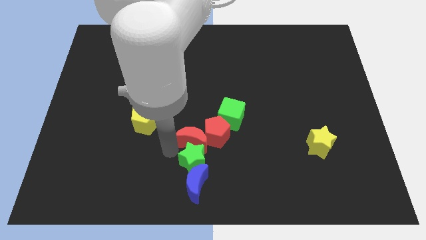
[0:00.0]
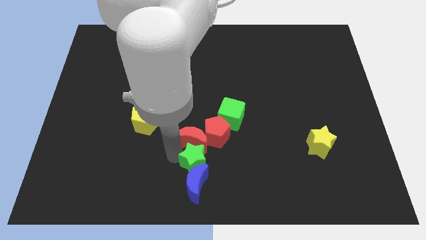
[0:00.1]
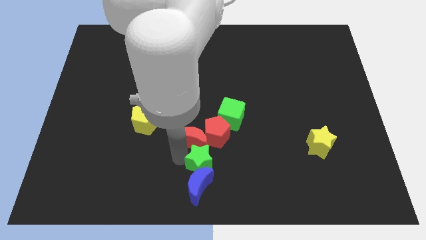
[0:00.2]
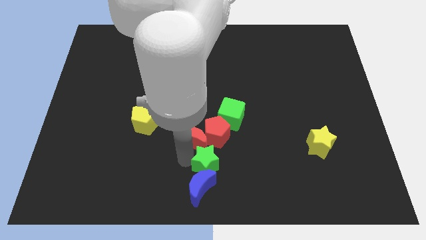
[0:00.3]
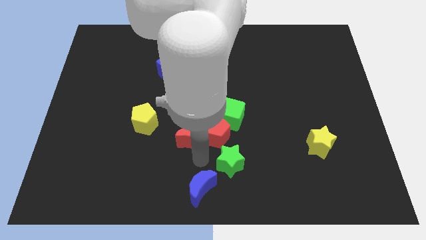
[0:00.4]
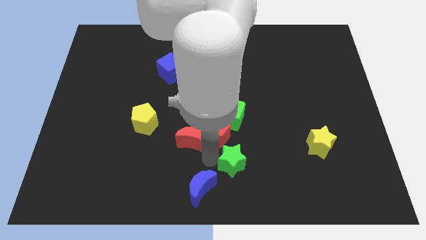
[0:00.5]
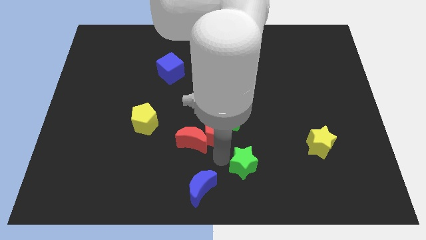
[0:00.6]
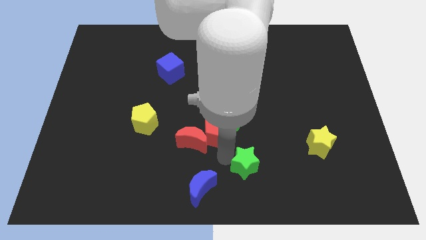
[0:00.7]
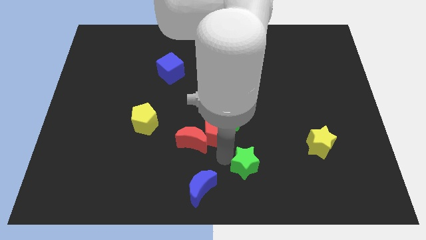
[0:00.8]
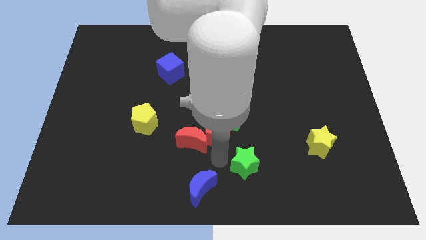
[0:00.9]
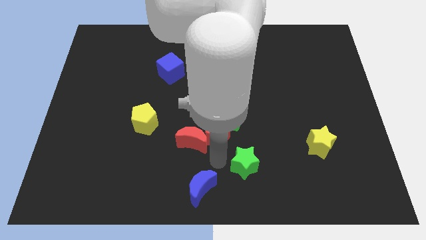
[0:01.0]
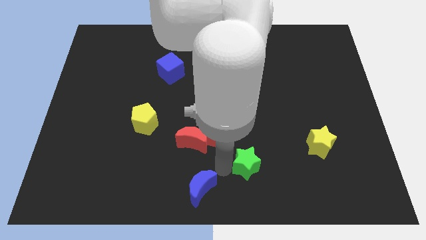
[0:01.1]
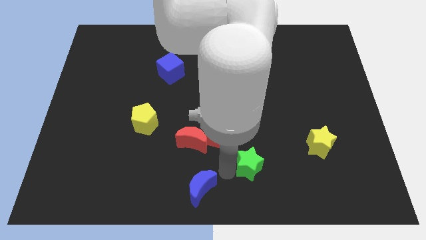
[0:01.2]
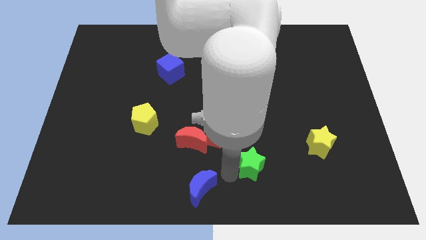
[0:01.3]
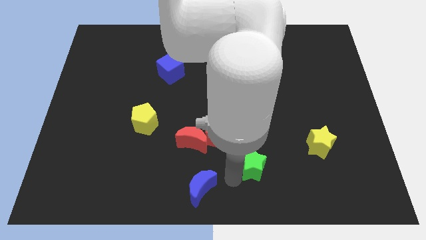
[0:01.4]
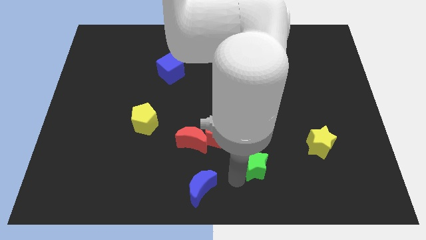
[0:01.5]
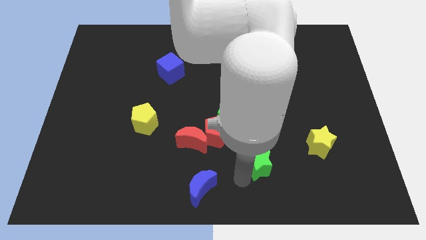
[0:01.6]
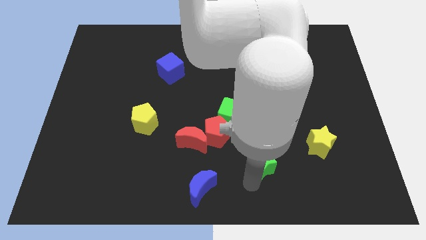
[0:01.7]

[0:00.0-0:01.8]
separate the green star from the red moon and blue moon

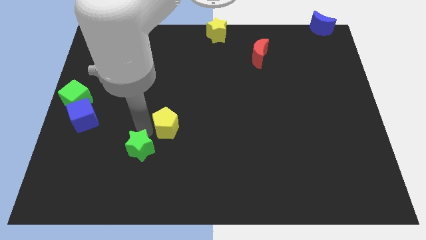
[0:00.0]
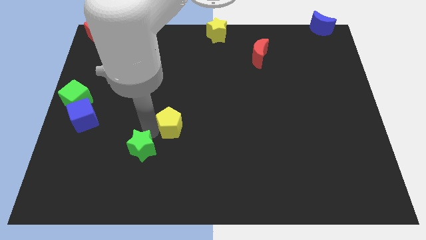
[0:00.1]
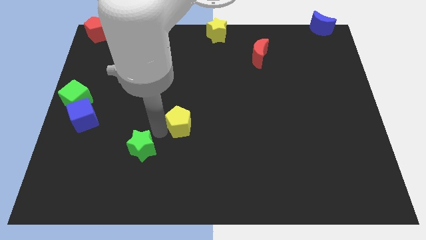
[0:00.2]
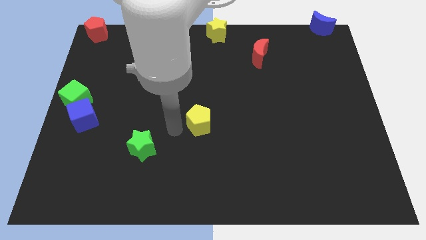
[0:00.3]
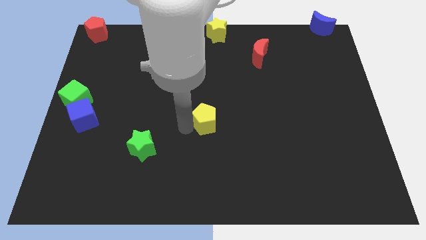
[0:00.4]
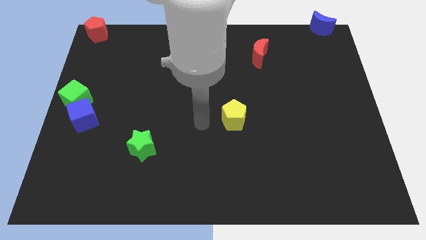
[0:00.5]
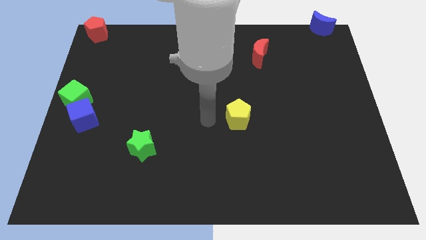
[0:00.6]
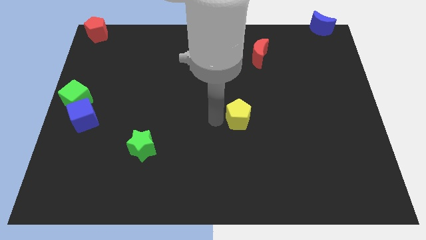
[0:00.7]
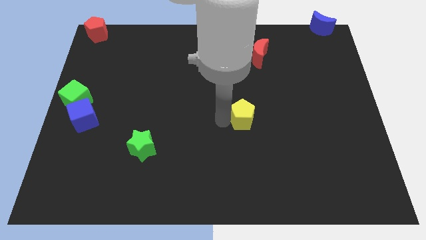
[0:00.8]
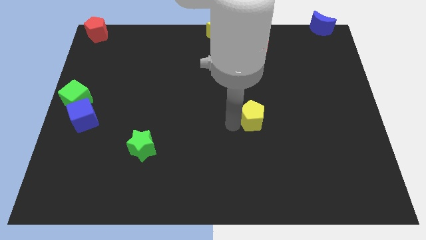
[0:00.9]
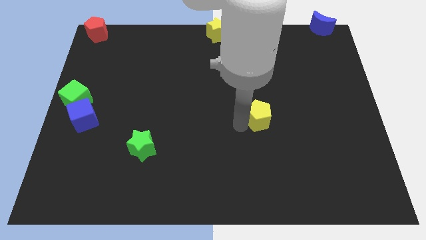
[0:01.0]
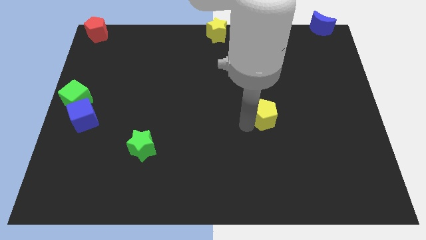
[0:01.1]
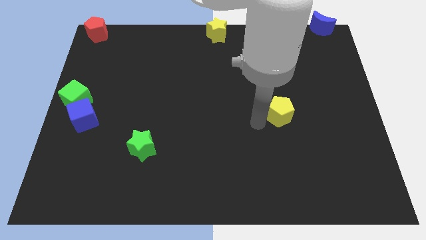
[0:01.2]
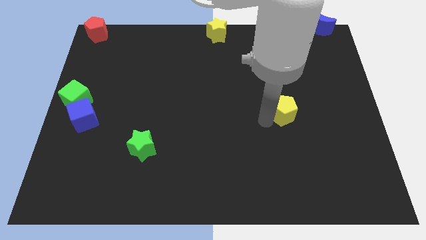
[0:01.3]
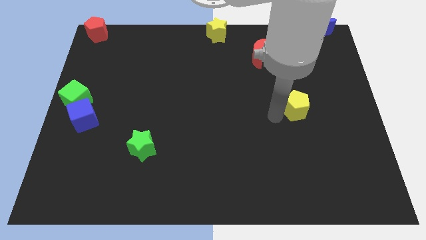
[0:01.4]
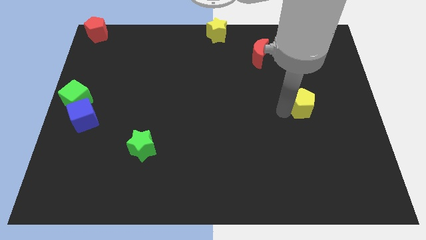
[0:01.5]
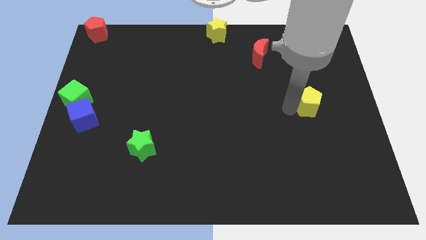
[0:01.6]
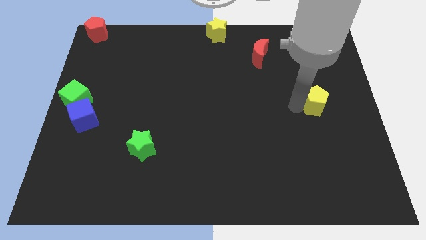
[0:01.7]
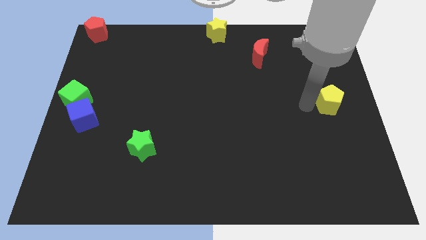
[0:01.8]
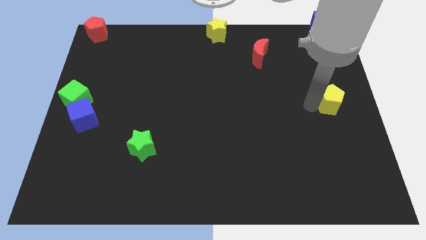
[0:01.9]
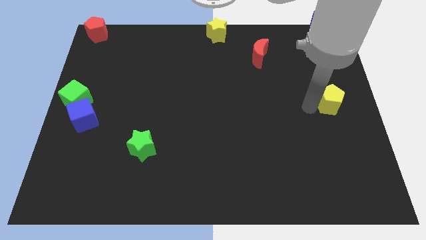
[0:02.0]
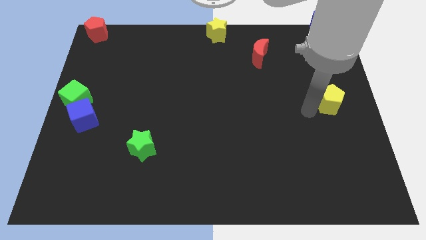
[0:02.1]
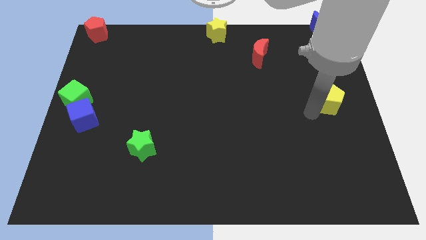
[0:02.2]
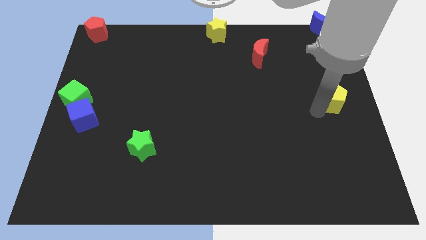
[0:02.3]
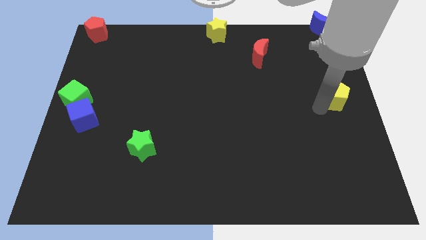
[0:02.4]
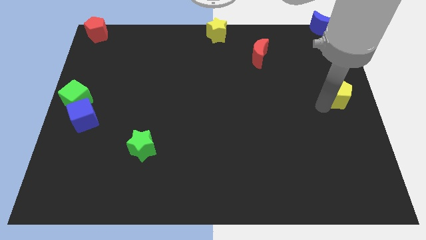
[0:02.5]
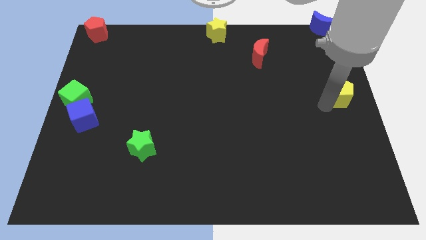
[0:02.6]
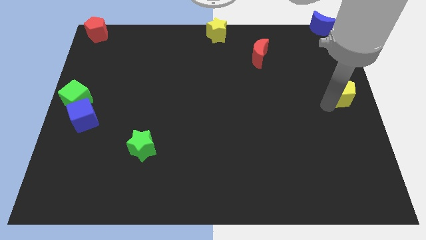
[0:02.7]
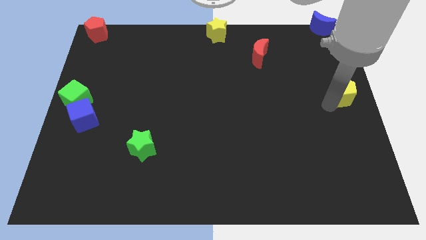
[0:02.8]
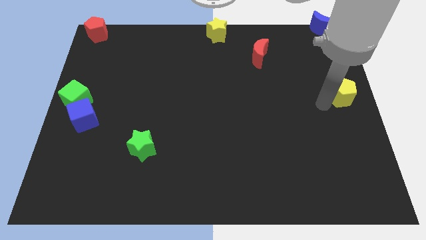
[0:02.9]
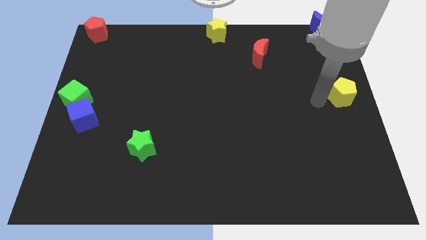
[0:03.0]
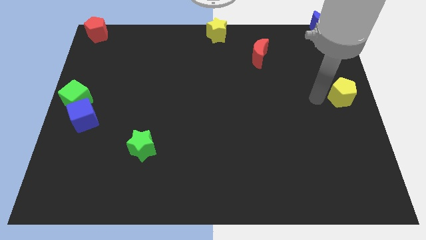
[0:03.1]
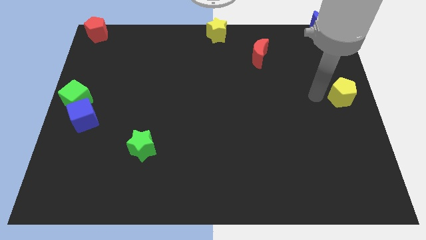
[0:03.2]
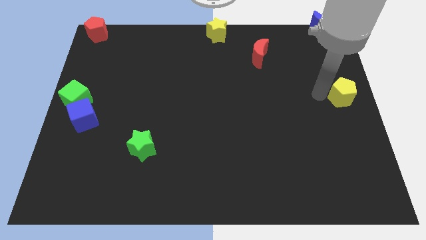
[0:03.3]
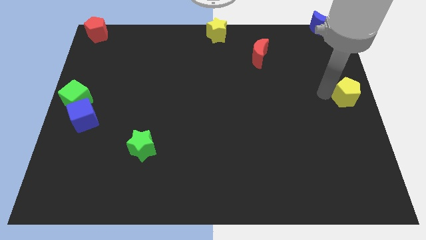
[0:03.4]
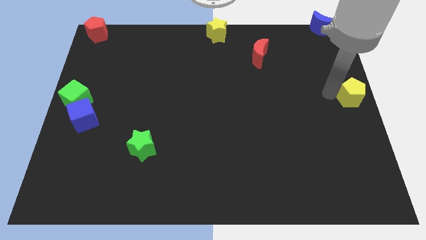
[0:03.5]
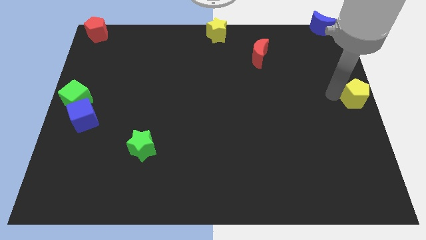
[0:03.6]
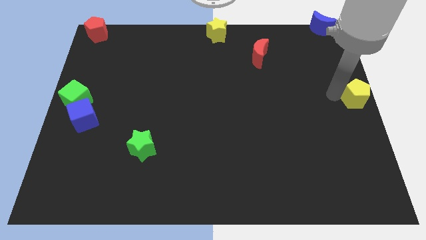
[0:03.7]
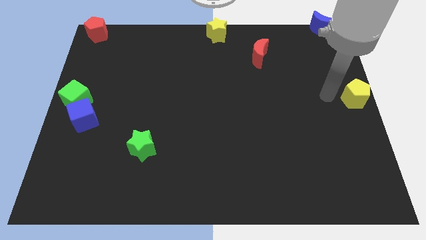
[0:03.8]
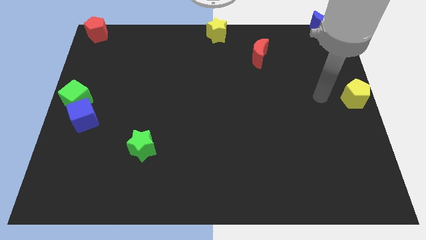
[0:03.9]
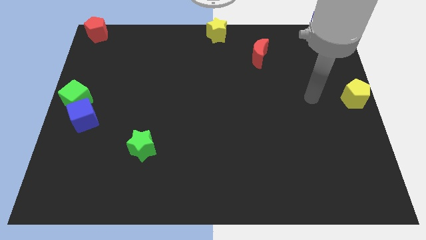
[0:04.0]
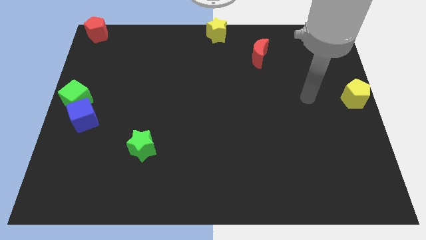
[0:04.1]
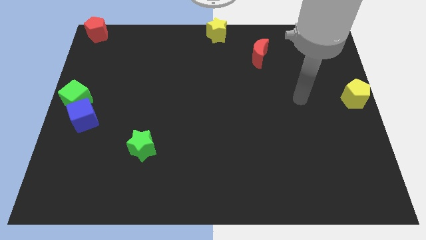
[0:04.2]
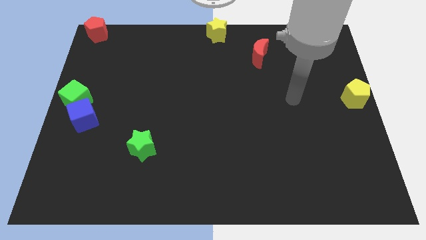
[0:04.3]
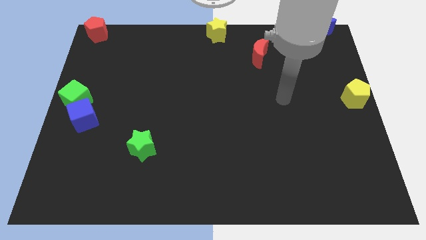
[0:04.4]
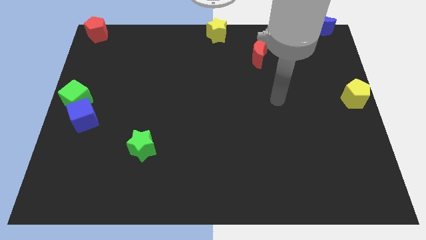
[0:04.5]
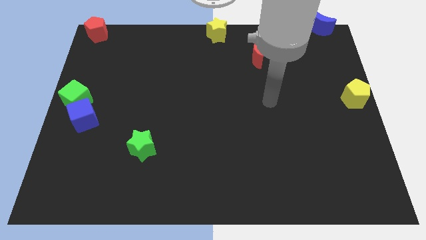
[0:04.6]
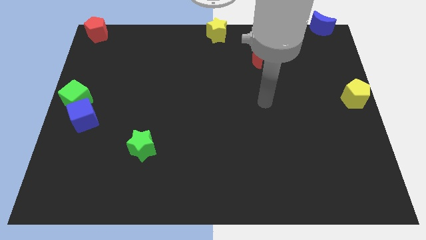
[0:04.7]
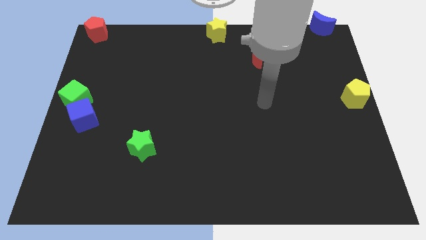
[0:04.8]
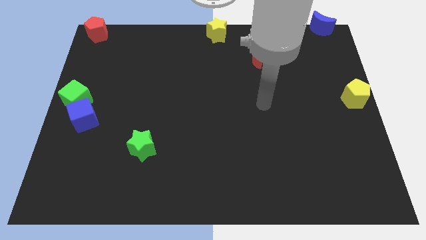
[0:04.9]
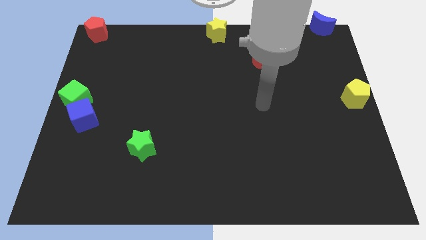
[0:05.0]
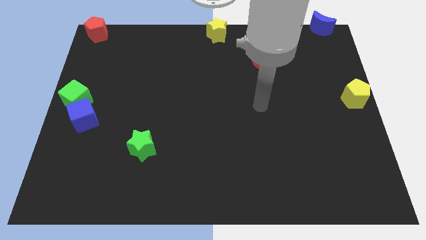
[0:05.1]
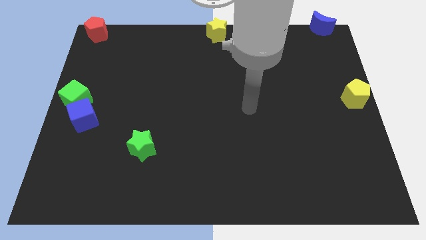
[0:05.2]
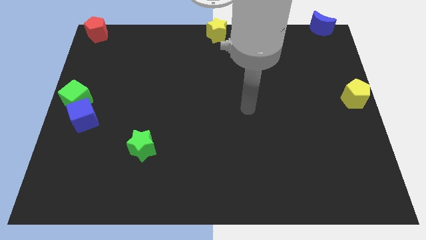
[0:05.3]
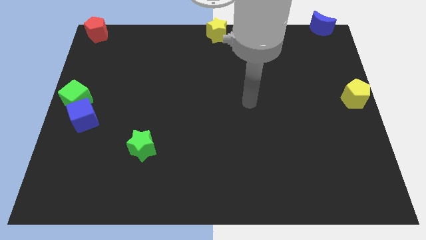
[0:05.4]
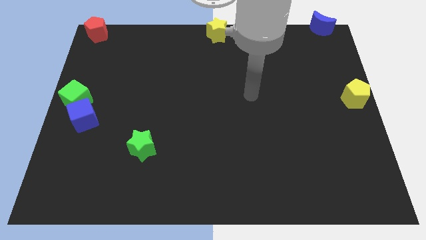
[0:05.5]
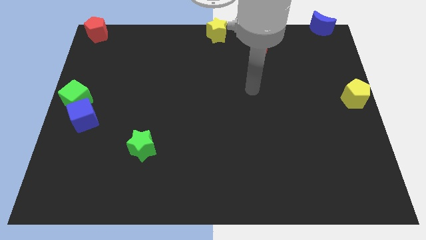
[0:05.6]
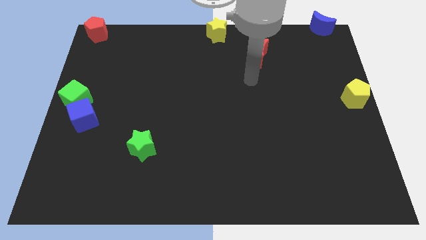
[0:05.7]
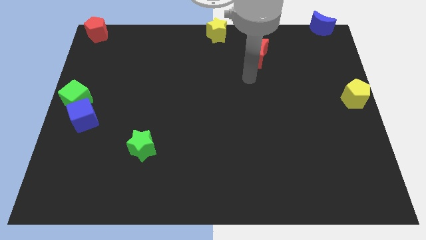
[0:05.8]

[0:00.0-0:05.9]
move the yellow pentagon to the right center of the board

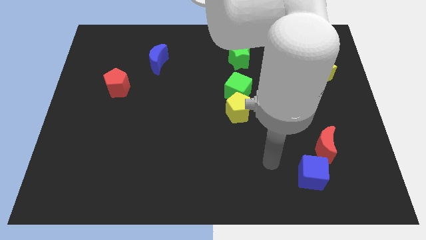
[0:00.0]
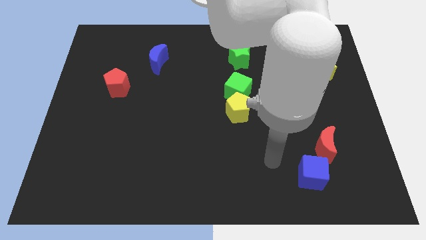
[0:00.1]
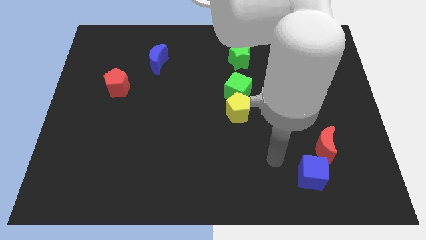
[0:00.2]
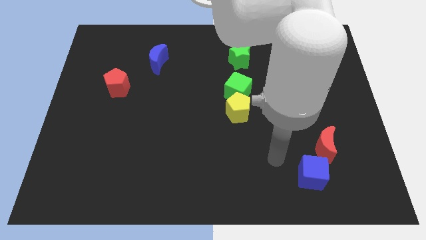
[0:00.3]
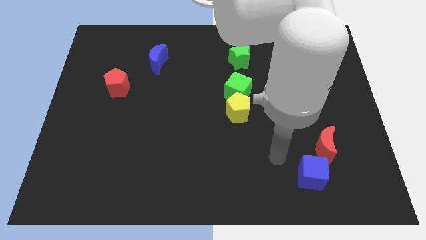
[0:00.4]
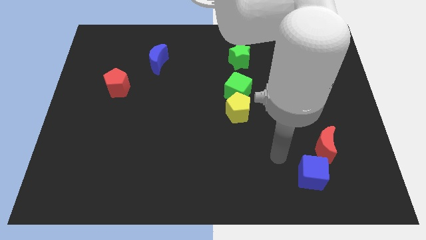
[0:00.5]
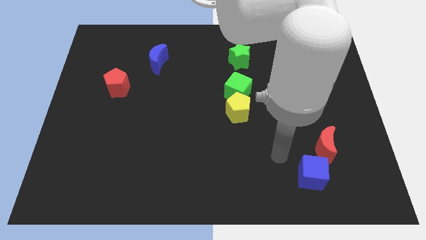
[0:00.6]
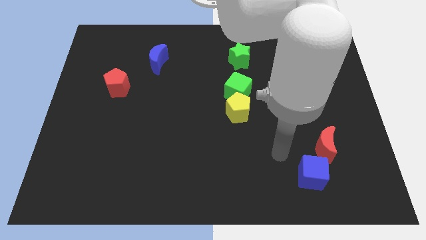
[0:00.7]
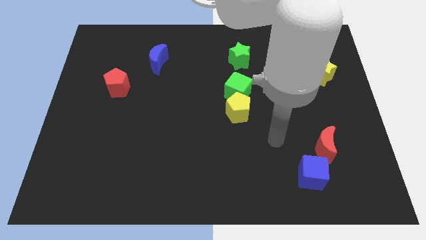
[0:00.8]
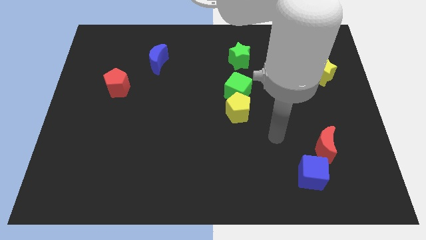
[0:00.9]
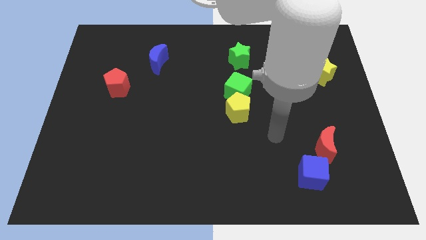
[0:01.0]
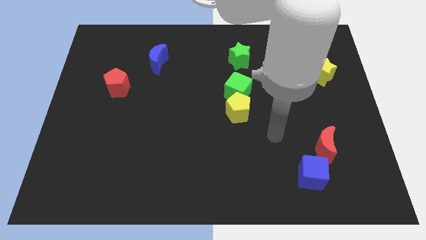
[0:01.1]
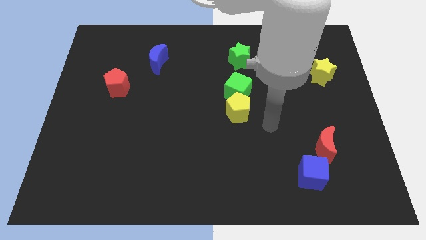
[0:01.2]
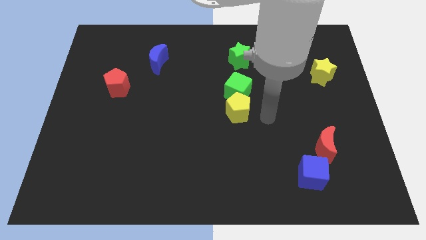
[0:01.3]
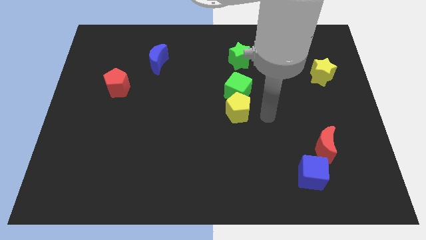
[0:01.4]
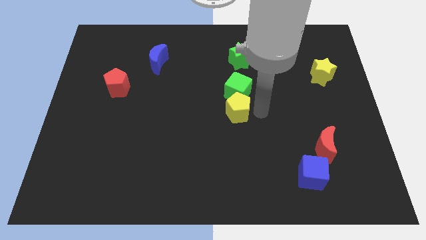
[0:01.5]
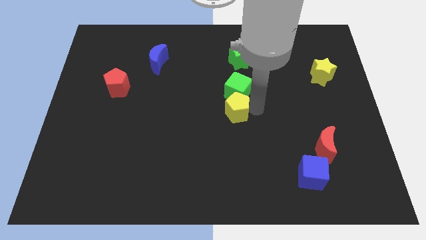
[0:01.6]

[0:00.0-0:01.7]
point your arm towards the right side of the yellow pentagon

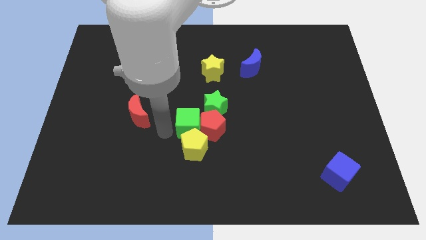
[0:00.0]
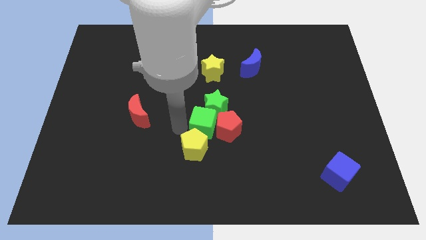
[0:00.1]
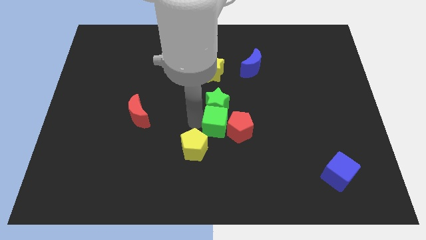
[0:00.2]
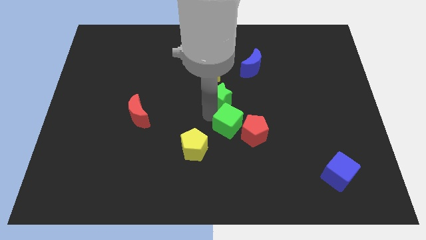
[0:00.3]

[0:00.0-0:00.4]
place green cube below green star
